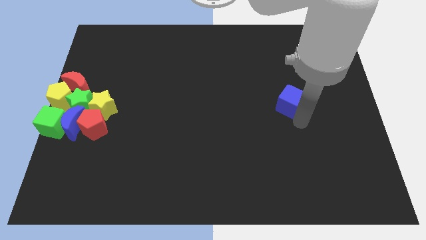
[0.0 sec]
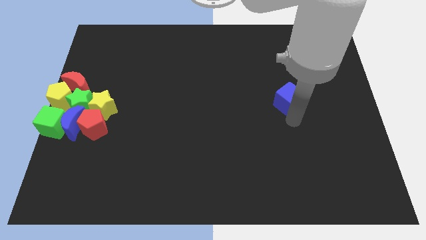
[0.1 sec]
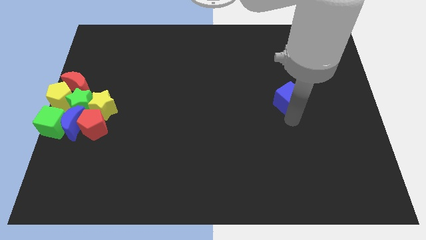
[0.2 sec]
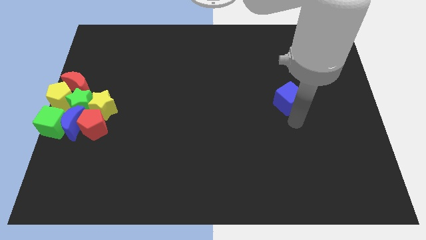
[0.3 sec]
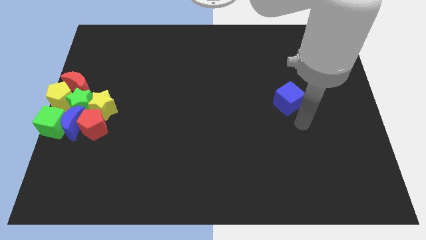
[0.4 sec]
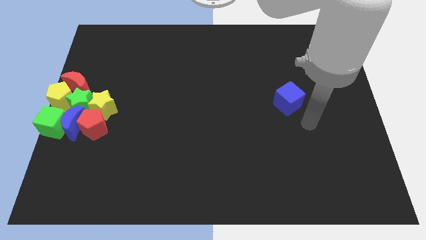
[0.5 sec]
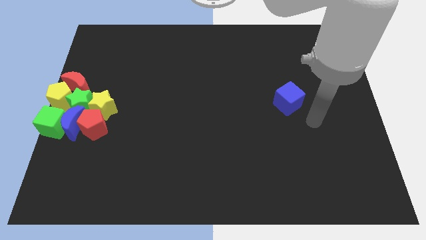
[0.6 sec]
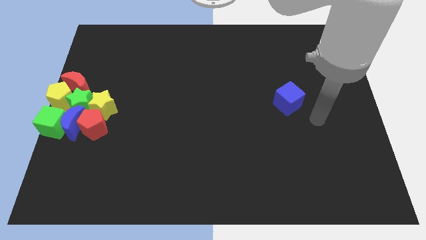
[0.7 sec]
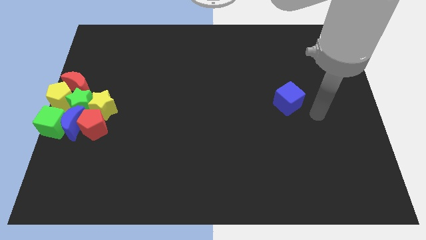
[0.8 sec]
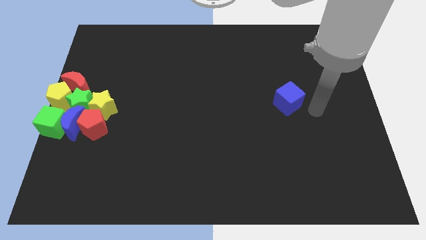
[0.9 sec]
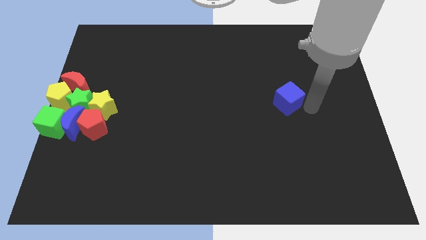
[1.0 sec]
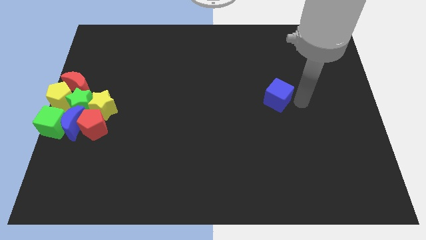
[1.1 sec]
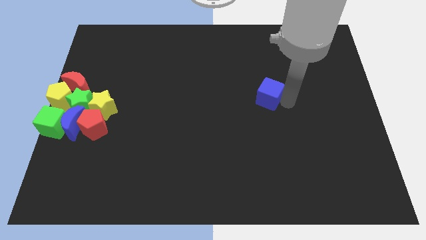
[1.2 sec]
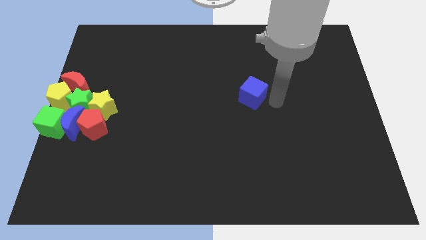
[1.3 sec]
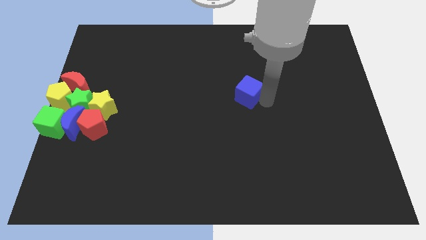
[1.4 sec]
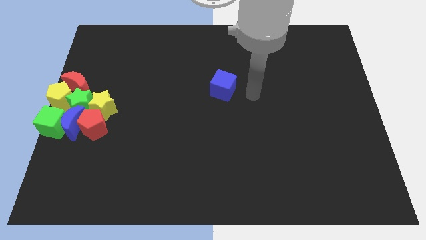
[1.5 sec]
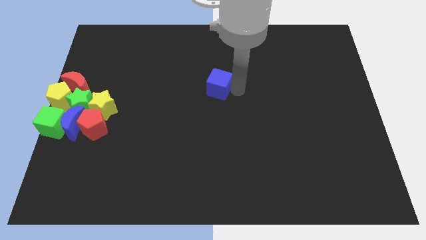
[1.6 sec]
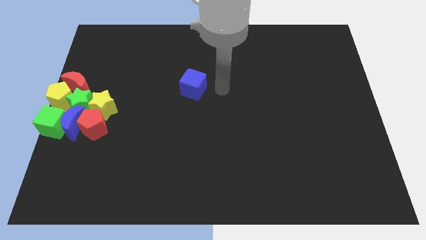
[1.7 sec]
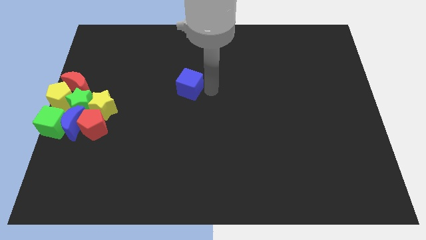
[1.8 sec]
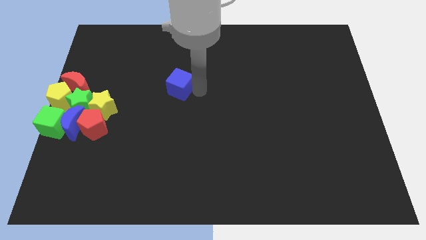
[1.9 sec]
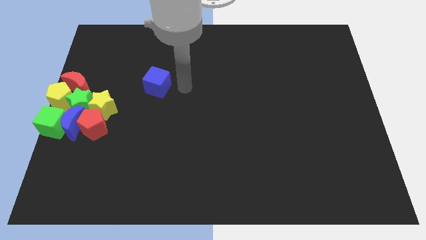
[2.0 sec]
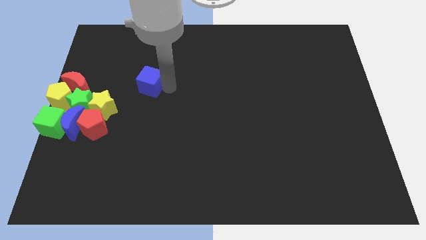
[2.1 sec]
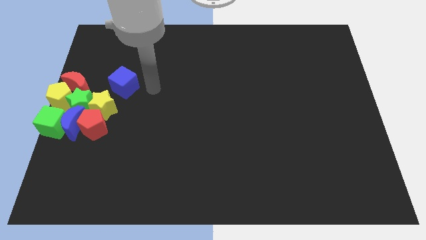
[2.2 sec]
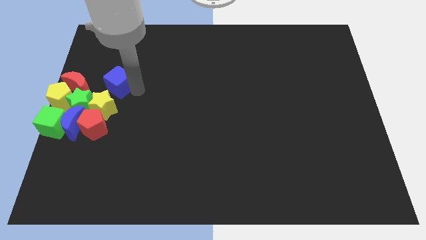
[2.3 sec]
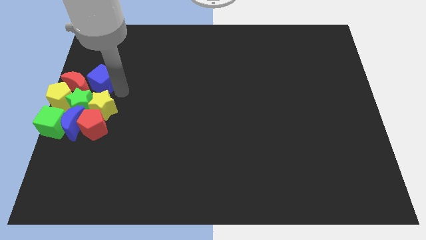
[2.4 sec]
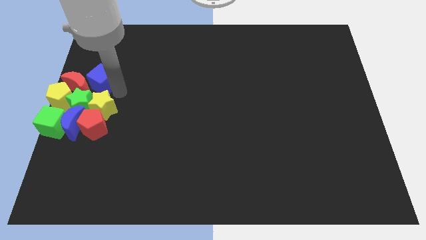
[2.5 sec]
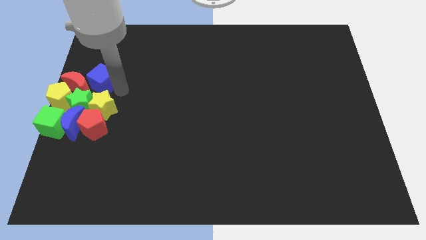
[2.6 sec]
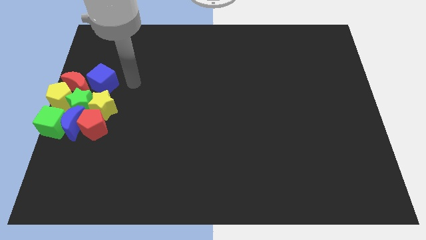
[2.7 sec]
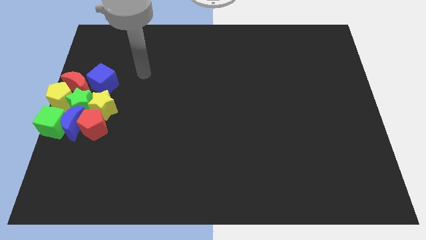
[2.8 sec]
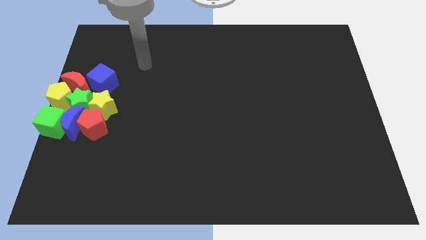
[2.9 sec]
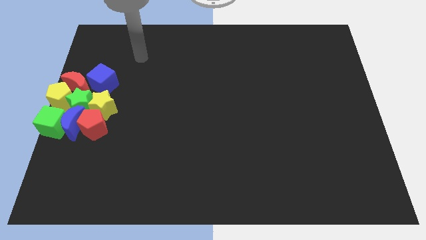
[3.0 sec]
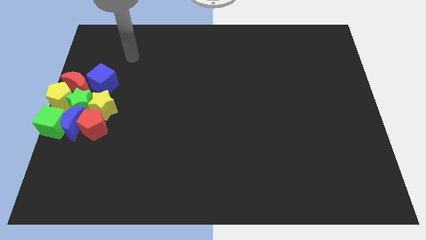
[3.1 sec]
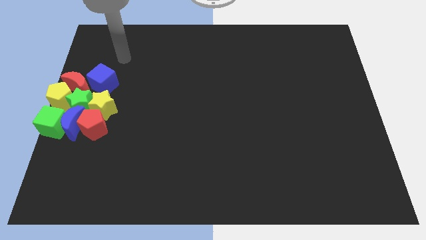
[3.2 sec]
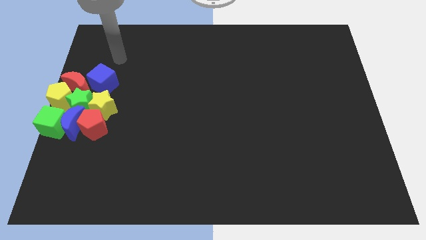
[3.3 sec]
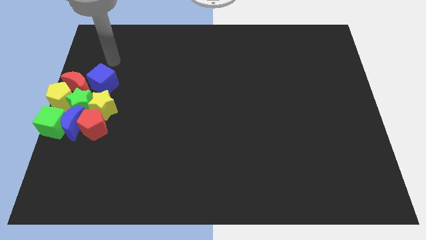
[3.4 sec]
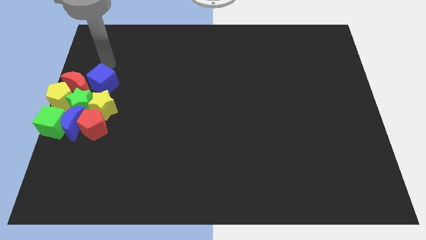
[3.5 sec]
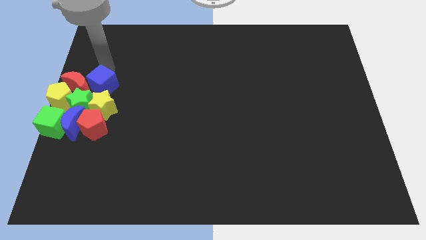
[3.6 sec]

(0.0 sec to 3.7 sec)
push the blue cube to the right of the red crescent

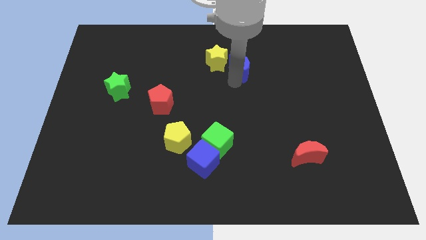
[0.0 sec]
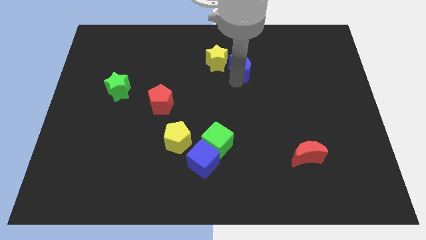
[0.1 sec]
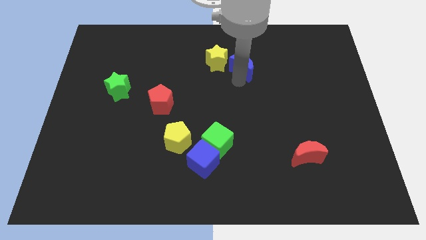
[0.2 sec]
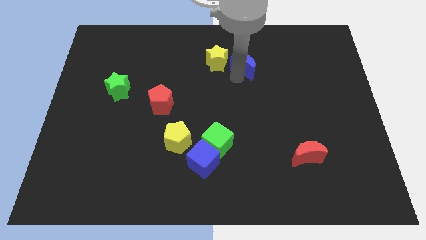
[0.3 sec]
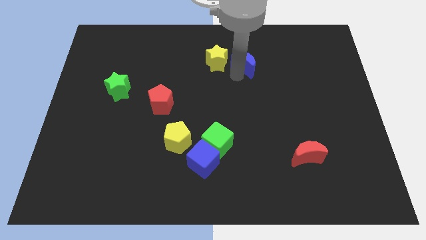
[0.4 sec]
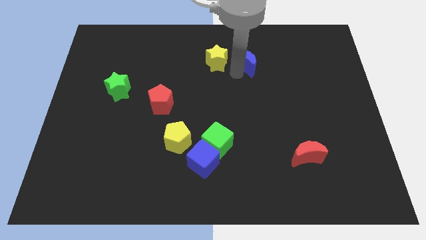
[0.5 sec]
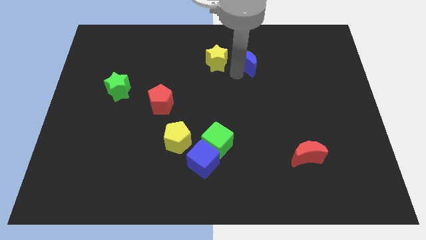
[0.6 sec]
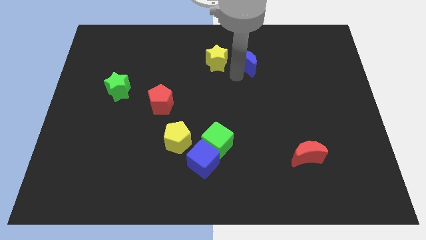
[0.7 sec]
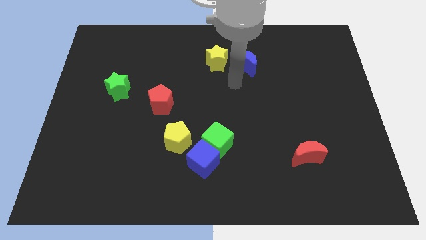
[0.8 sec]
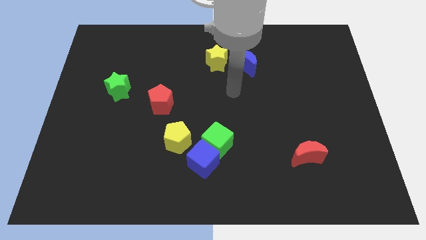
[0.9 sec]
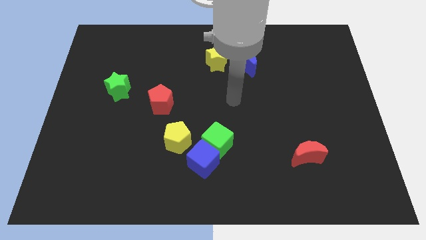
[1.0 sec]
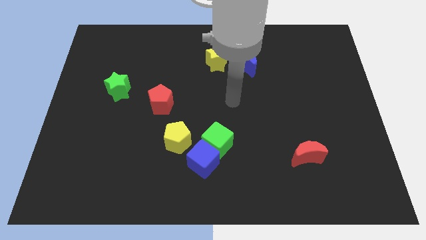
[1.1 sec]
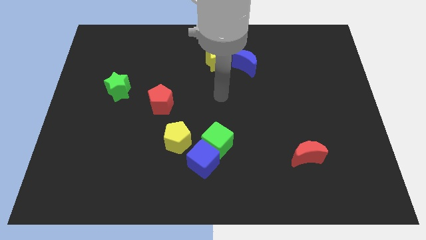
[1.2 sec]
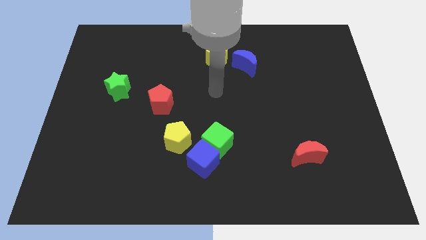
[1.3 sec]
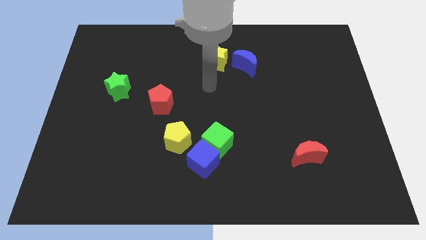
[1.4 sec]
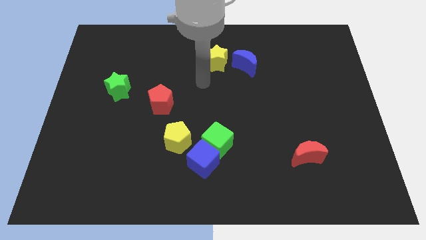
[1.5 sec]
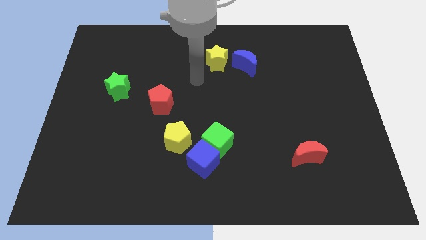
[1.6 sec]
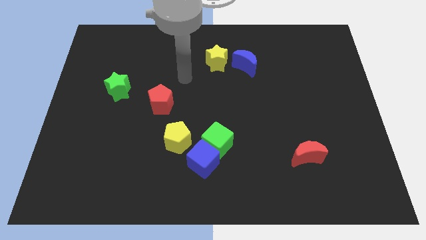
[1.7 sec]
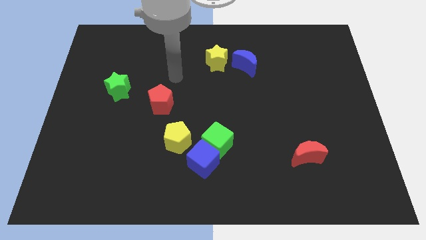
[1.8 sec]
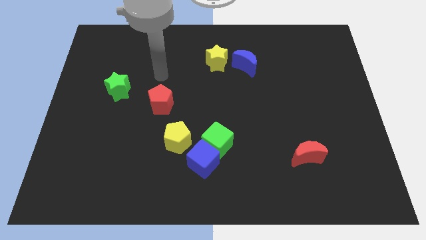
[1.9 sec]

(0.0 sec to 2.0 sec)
place your arm at the top of red pentagon

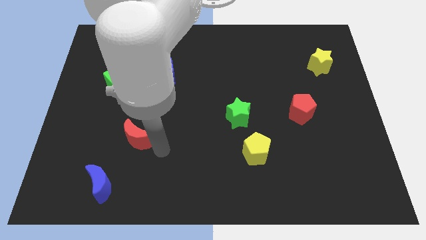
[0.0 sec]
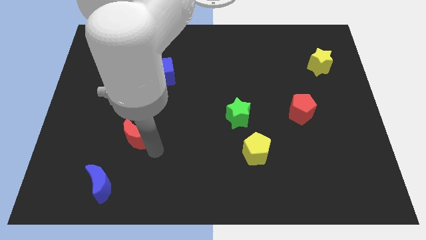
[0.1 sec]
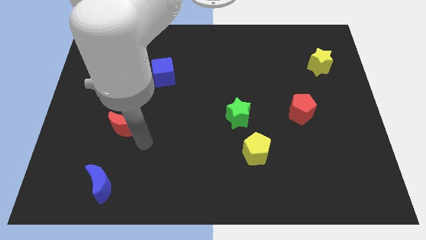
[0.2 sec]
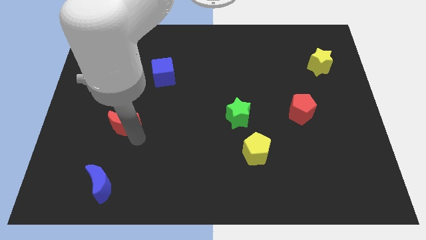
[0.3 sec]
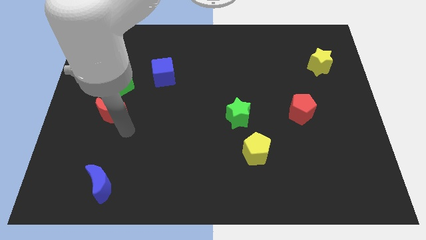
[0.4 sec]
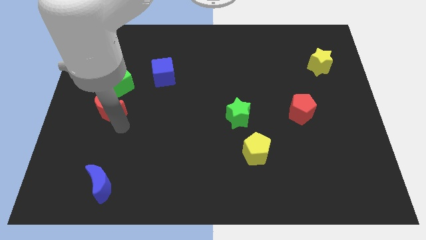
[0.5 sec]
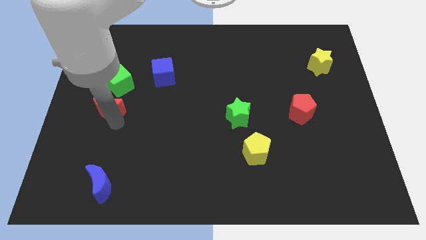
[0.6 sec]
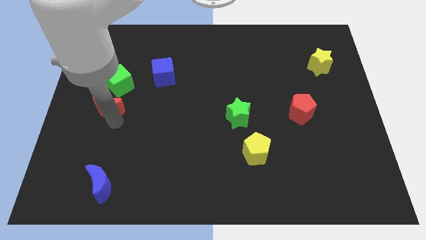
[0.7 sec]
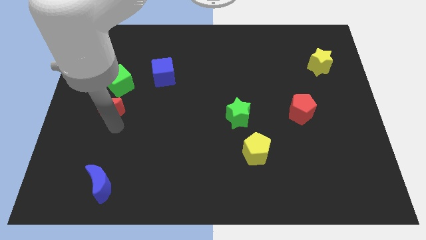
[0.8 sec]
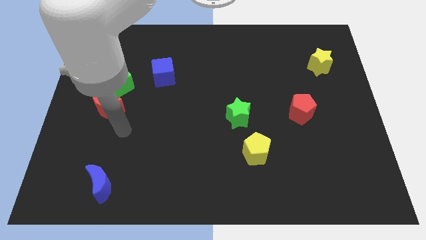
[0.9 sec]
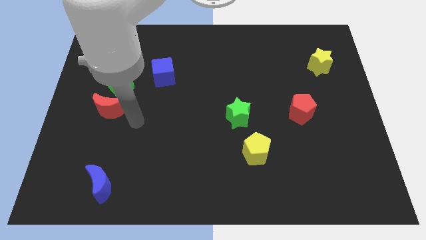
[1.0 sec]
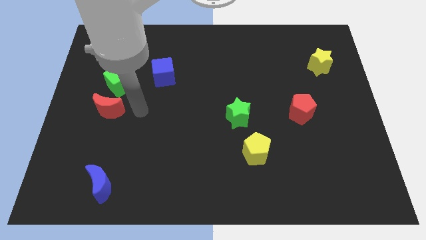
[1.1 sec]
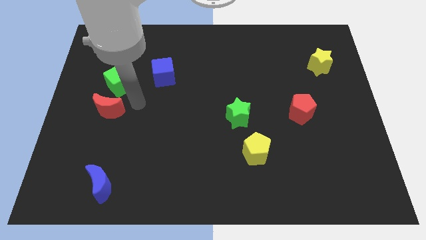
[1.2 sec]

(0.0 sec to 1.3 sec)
move the red crescent to the bottom side of the green cube

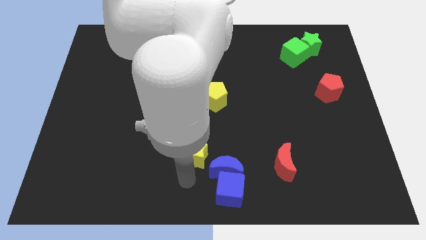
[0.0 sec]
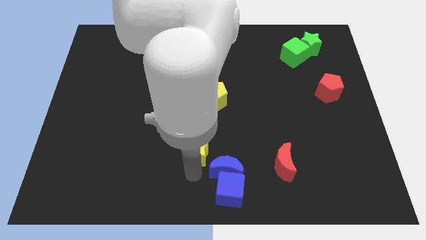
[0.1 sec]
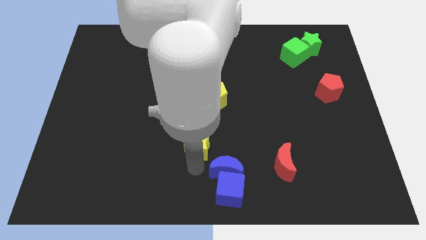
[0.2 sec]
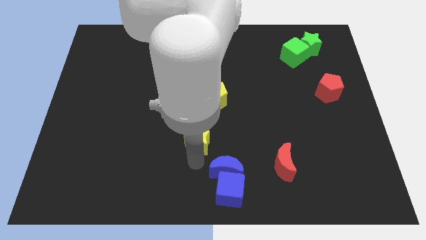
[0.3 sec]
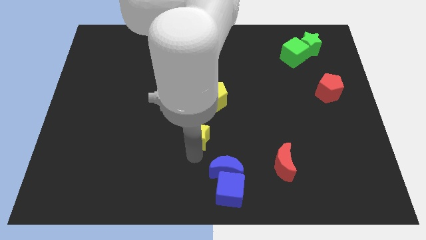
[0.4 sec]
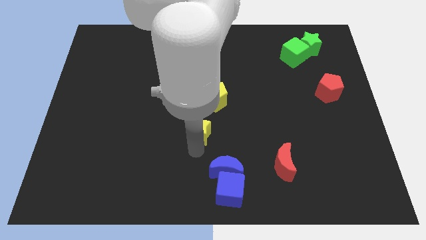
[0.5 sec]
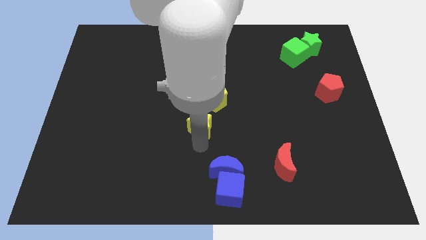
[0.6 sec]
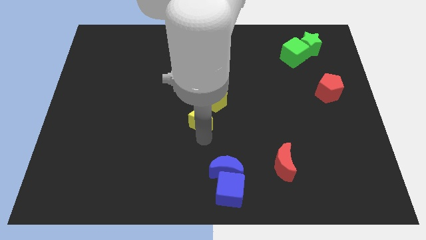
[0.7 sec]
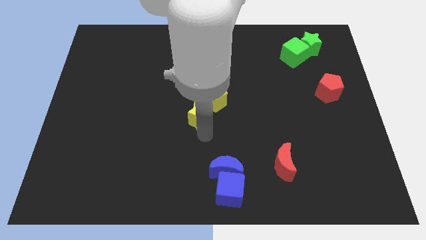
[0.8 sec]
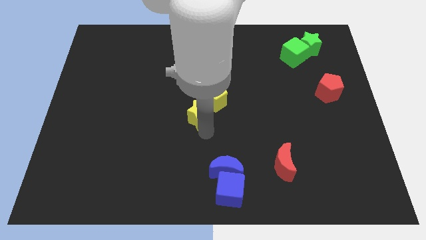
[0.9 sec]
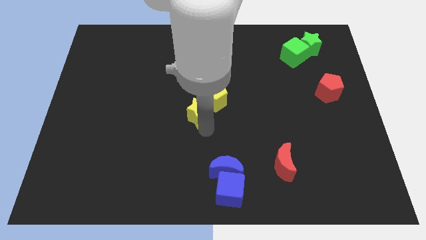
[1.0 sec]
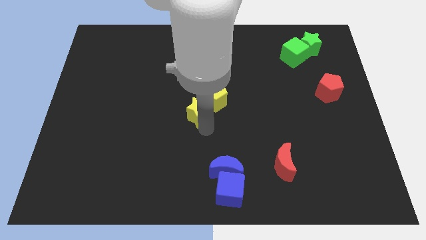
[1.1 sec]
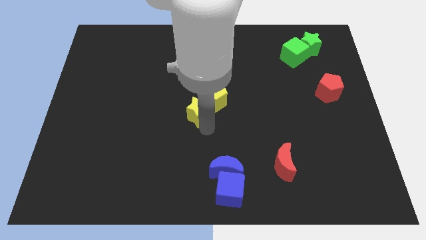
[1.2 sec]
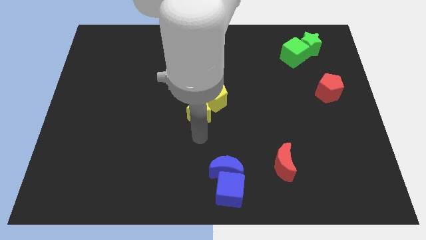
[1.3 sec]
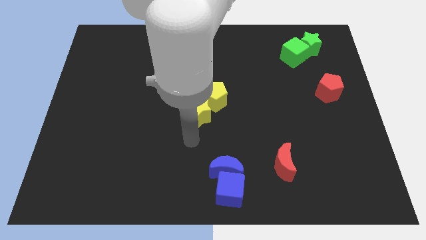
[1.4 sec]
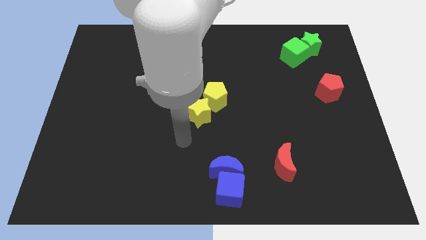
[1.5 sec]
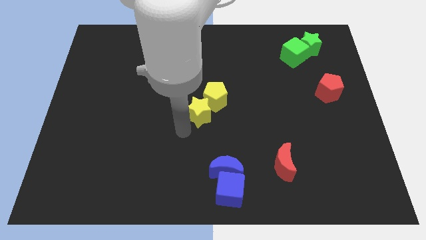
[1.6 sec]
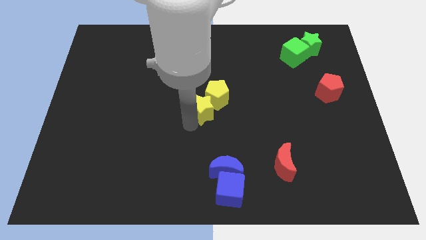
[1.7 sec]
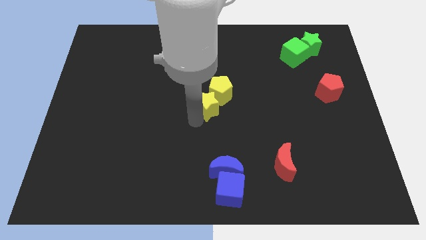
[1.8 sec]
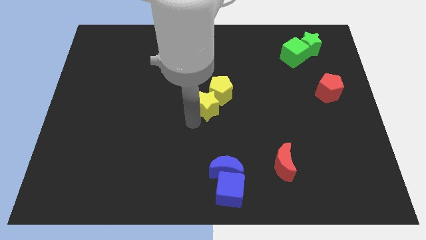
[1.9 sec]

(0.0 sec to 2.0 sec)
move the yellow star into the yellow pentagon
